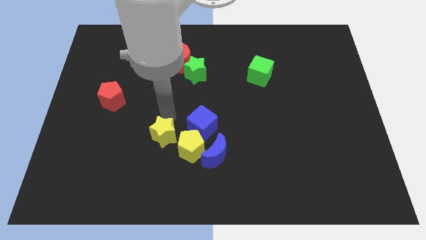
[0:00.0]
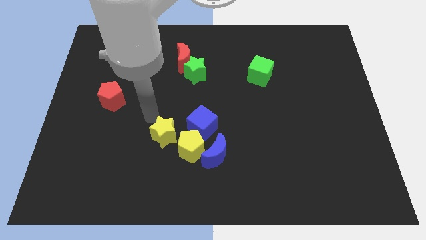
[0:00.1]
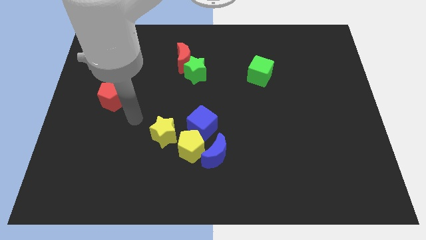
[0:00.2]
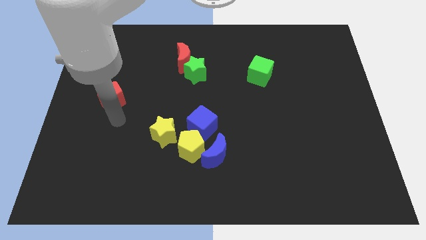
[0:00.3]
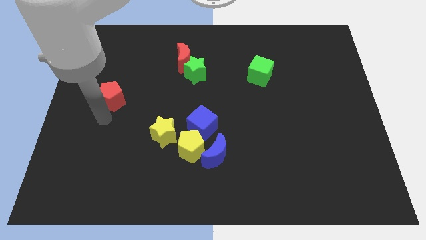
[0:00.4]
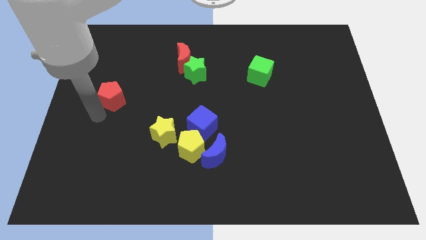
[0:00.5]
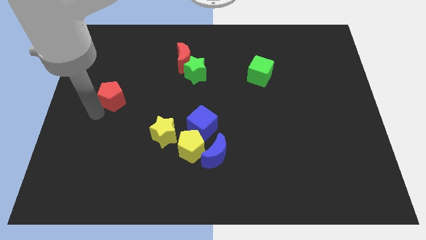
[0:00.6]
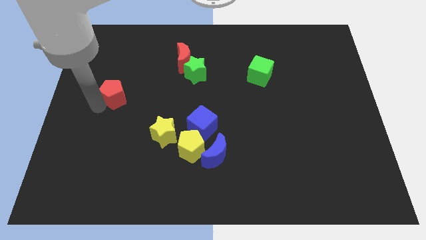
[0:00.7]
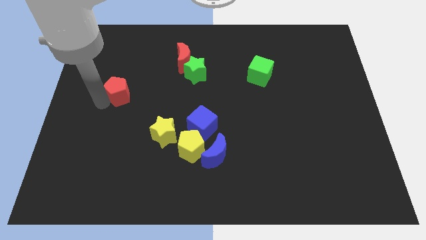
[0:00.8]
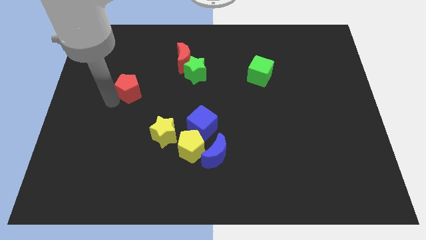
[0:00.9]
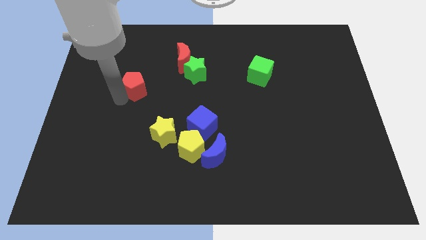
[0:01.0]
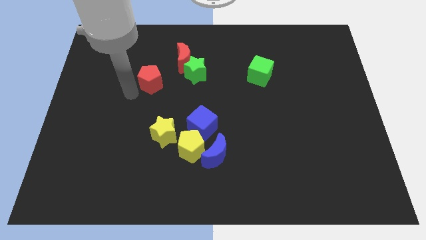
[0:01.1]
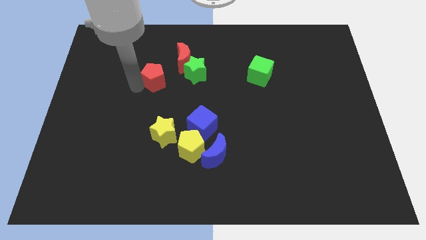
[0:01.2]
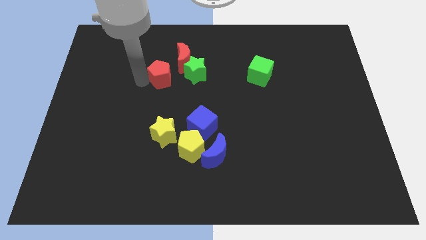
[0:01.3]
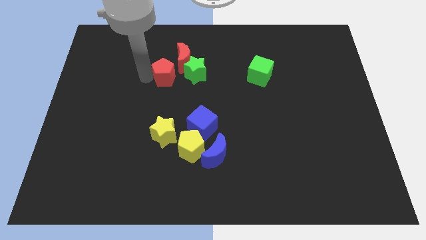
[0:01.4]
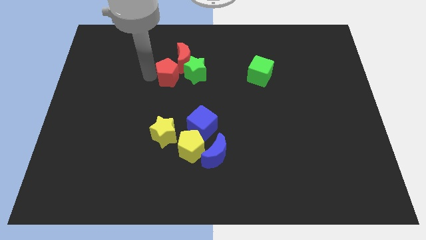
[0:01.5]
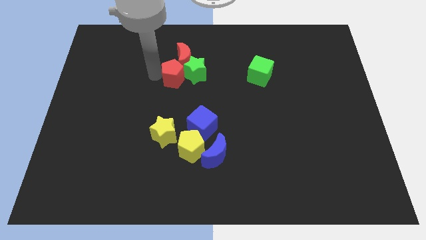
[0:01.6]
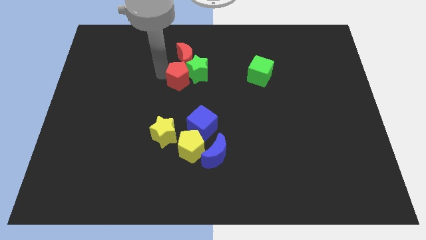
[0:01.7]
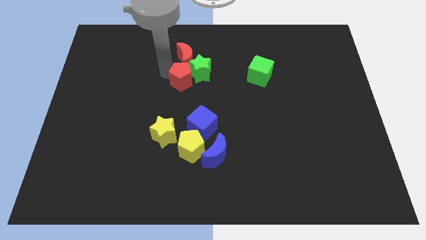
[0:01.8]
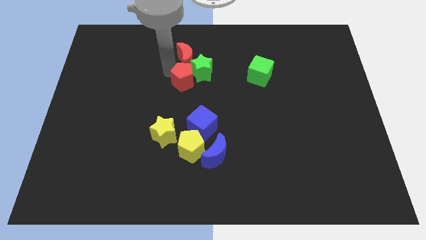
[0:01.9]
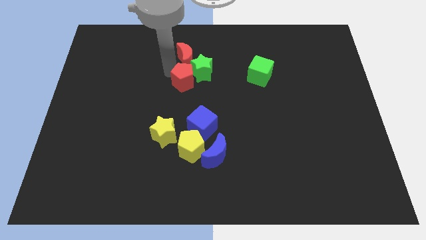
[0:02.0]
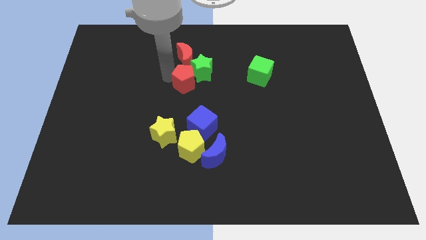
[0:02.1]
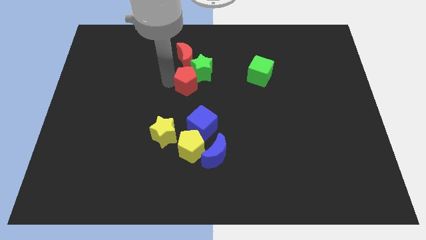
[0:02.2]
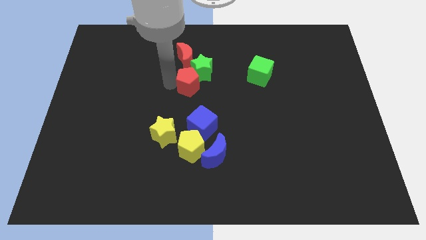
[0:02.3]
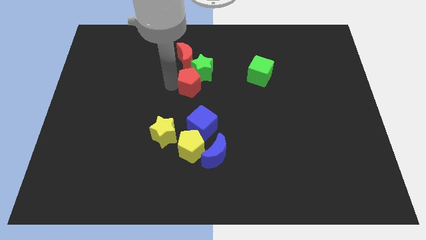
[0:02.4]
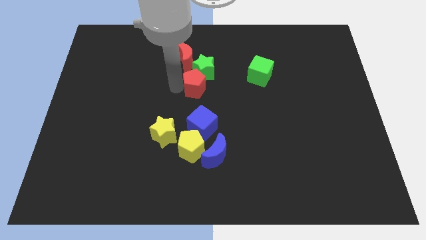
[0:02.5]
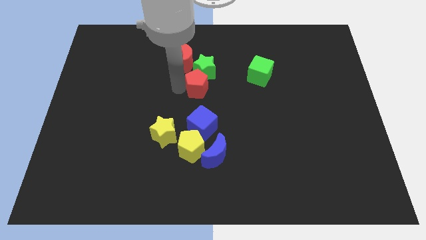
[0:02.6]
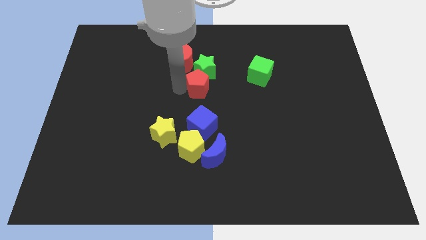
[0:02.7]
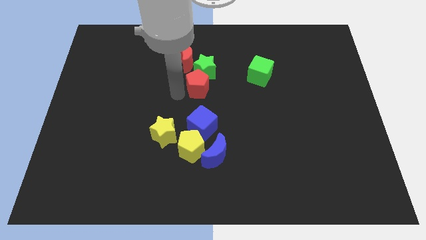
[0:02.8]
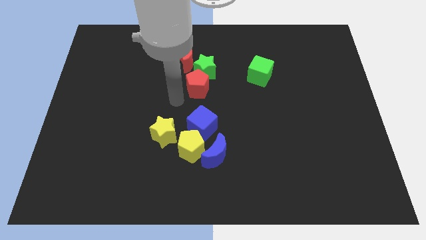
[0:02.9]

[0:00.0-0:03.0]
push the red pentagon below the green star

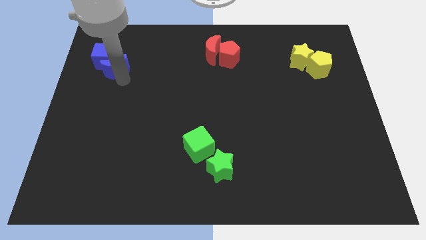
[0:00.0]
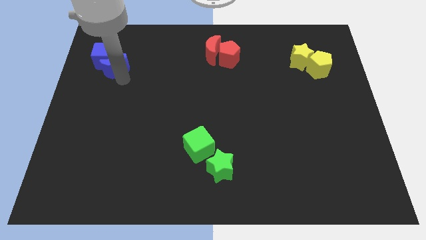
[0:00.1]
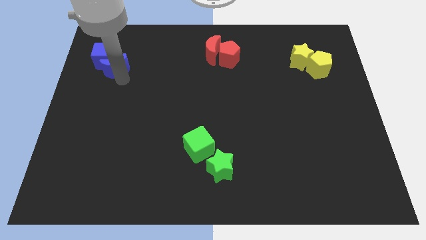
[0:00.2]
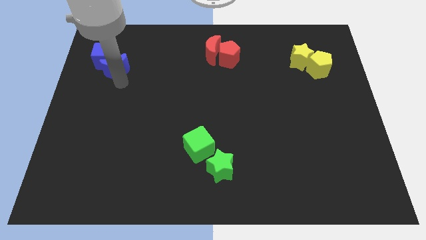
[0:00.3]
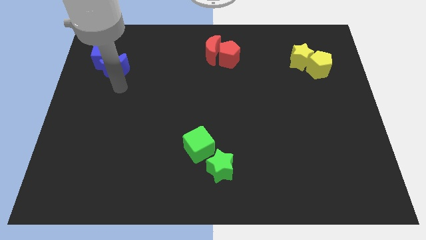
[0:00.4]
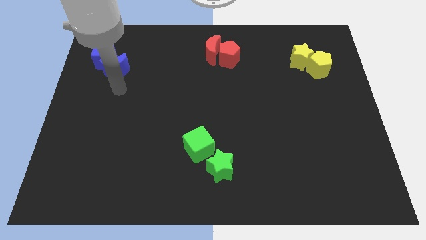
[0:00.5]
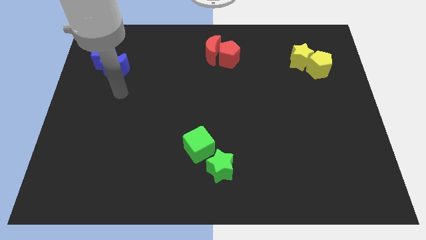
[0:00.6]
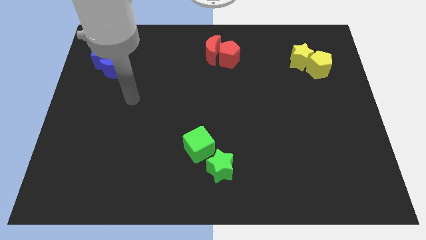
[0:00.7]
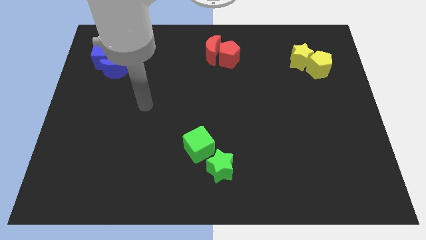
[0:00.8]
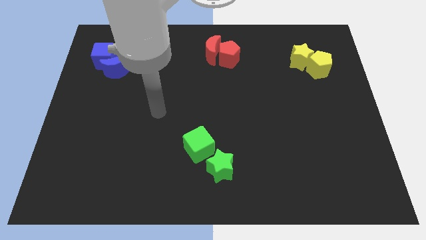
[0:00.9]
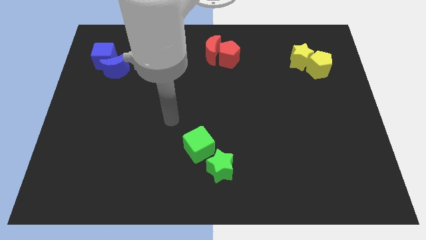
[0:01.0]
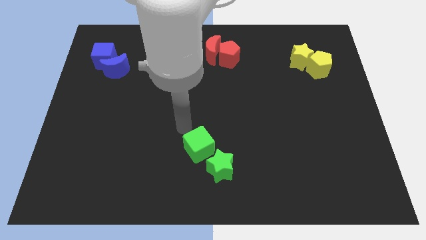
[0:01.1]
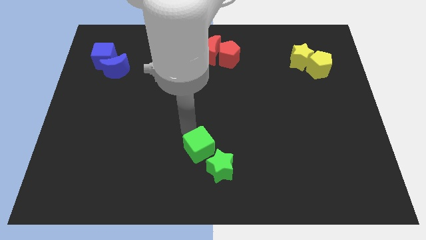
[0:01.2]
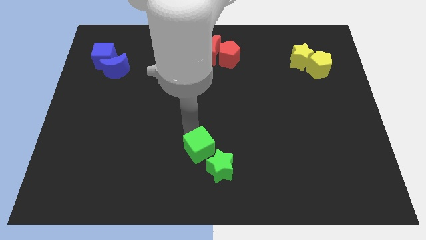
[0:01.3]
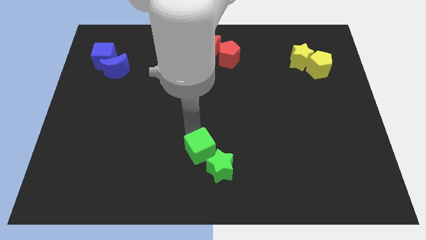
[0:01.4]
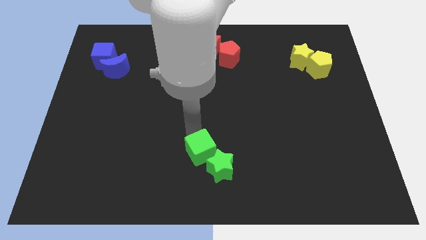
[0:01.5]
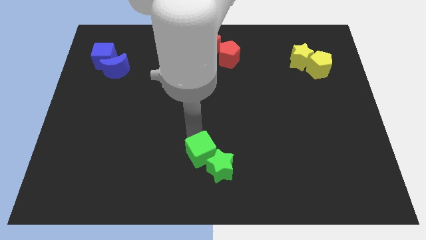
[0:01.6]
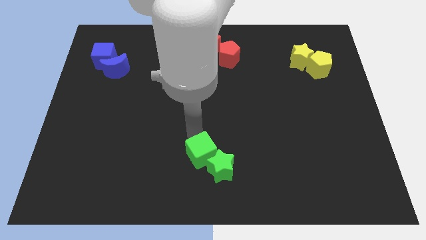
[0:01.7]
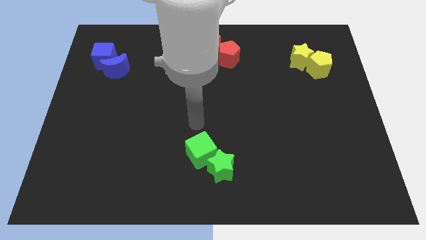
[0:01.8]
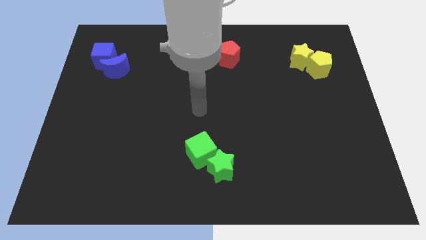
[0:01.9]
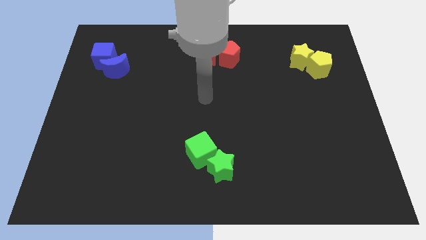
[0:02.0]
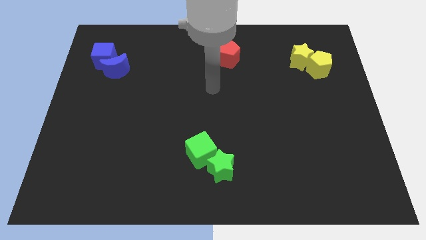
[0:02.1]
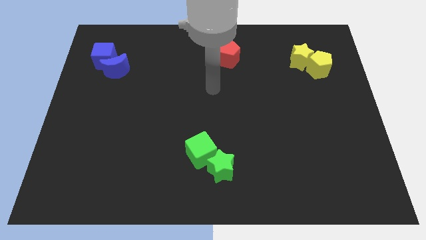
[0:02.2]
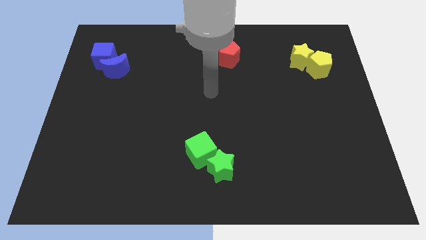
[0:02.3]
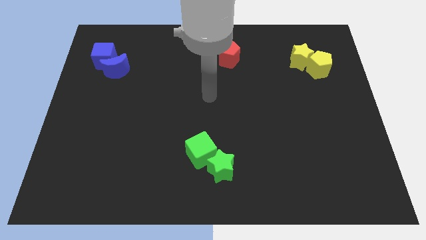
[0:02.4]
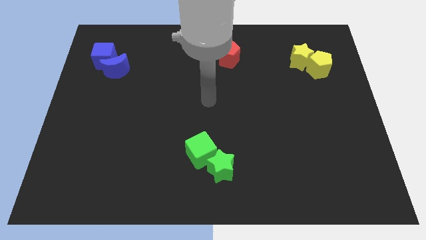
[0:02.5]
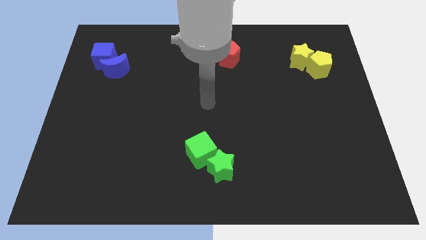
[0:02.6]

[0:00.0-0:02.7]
push the green cube into the green star and move away from it

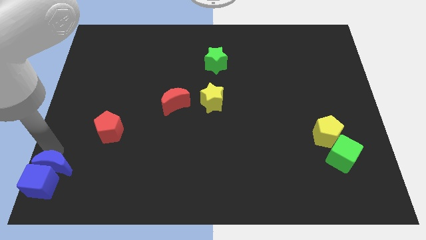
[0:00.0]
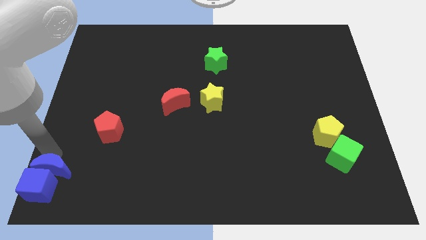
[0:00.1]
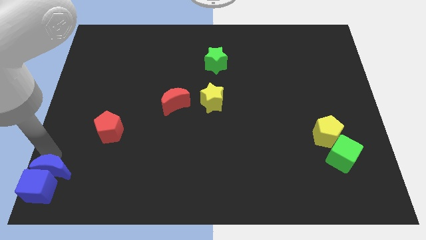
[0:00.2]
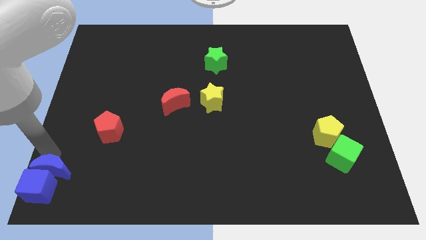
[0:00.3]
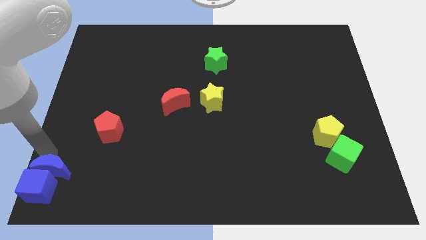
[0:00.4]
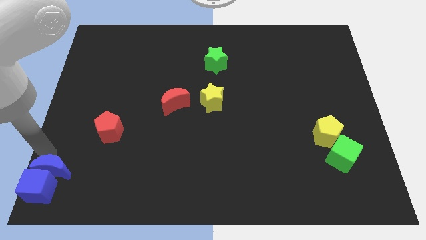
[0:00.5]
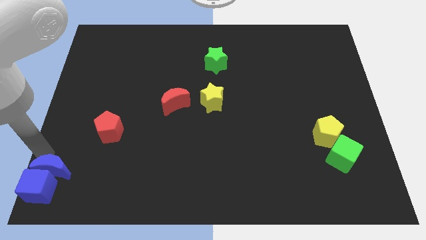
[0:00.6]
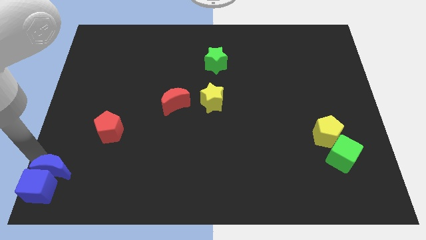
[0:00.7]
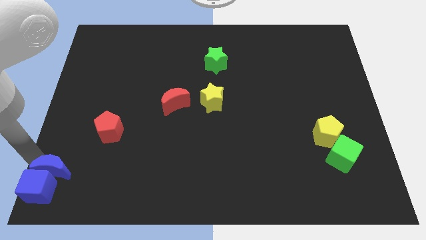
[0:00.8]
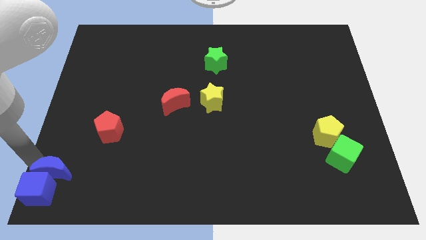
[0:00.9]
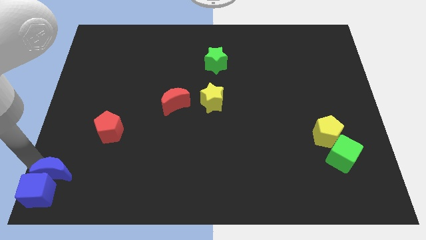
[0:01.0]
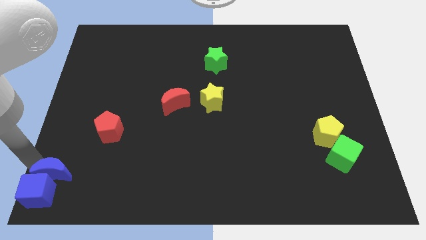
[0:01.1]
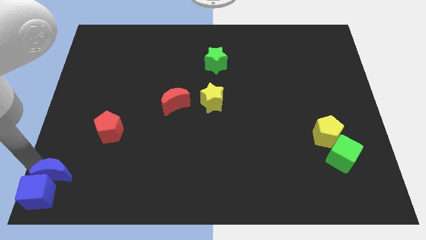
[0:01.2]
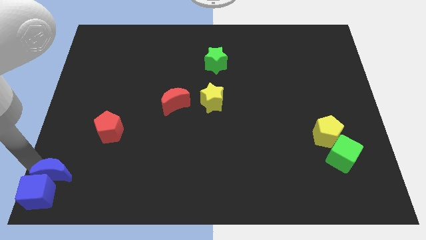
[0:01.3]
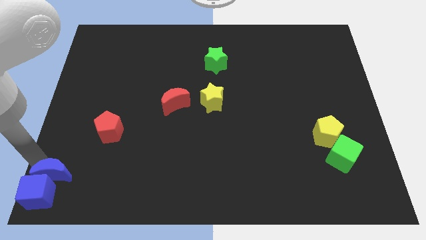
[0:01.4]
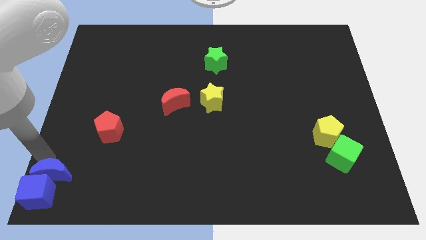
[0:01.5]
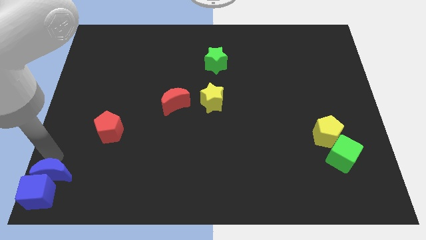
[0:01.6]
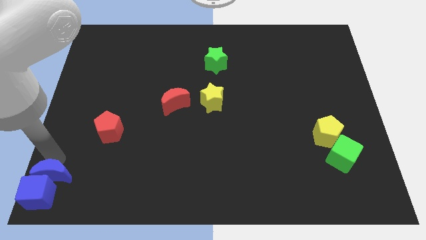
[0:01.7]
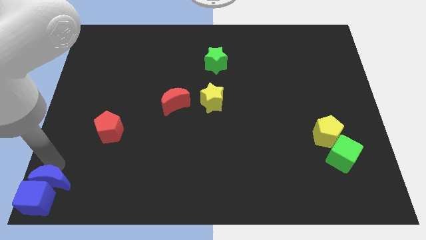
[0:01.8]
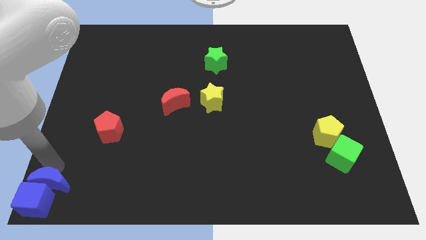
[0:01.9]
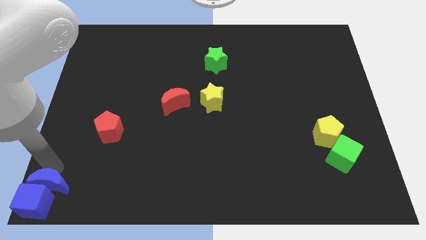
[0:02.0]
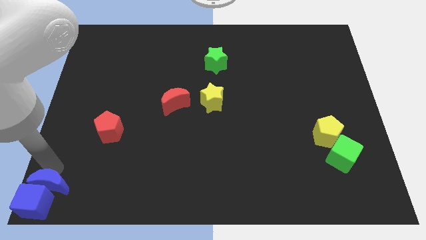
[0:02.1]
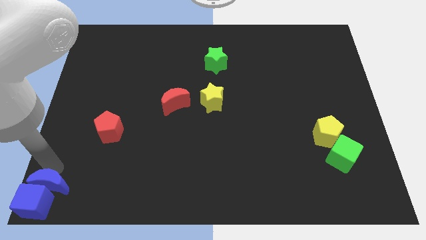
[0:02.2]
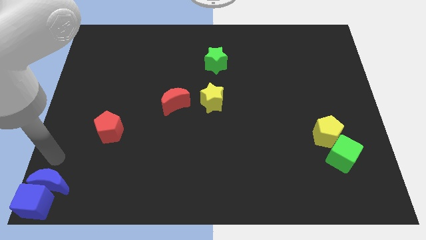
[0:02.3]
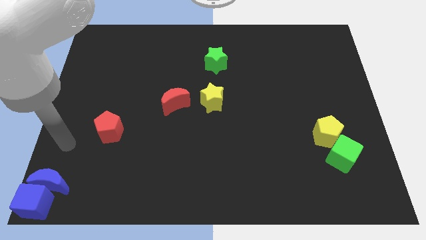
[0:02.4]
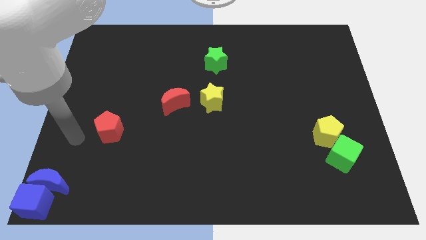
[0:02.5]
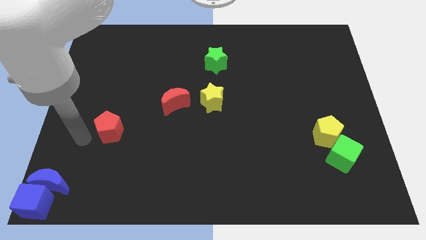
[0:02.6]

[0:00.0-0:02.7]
adjust the blue blocks at the bottom left corner

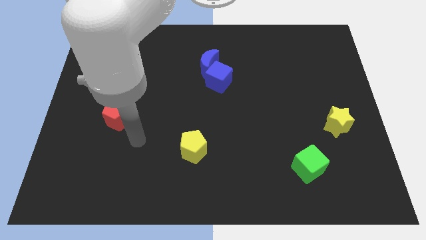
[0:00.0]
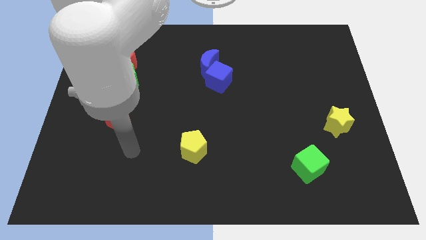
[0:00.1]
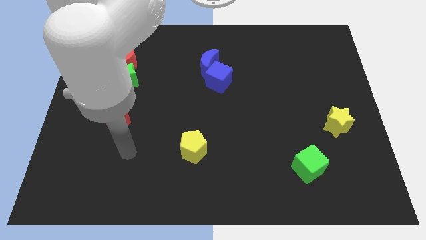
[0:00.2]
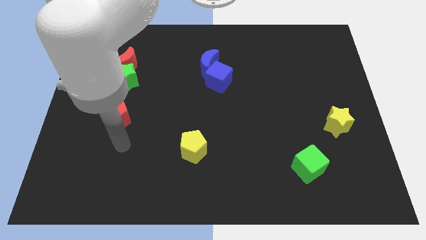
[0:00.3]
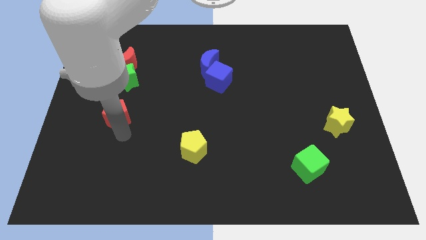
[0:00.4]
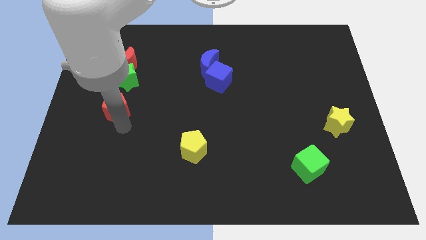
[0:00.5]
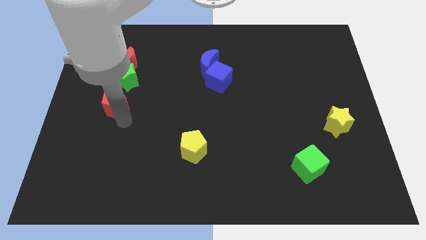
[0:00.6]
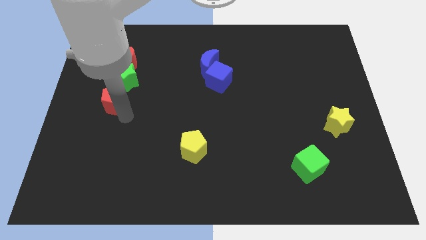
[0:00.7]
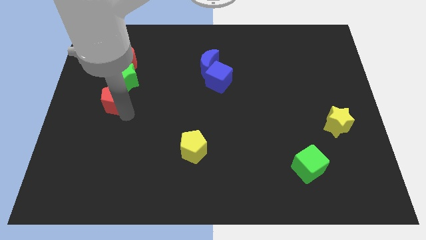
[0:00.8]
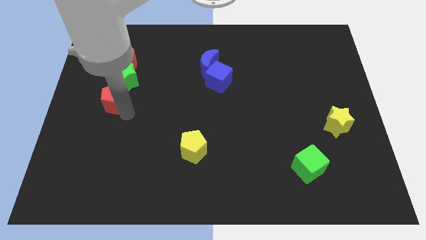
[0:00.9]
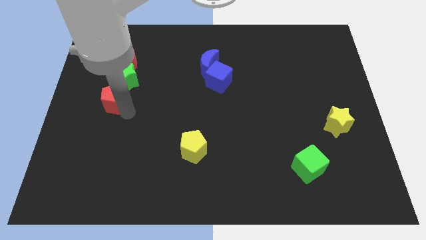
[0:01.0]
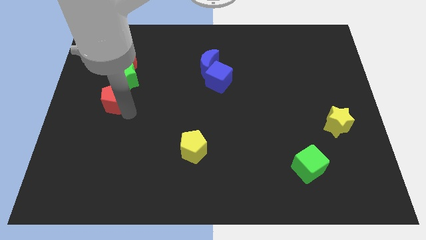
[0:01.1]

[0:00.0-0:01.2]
put the red pentagon at the bottom of green star
